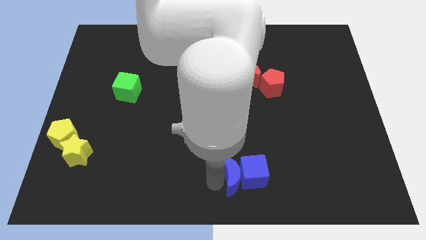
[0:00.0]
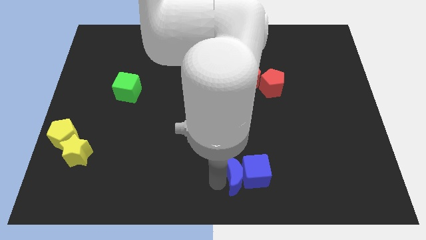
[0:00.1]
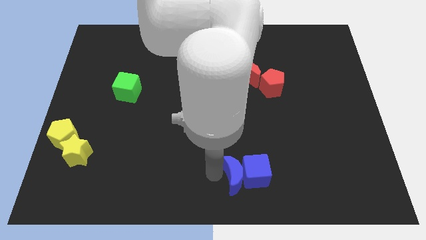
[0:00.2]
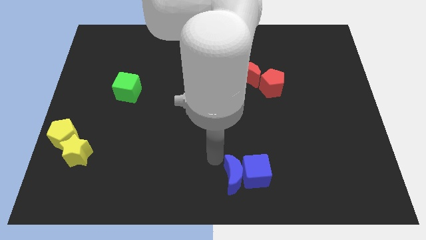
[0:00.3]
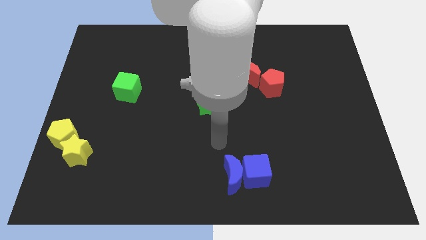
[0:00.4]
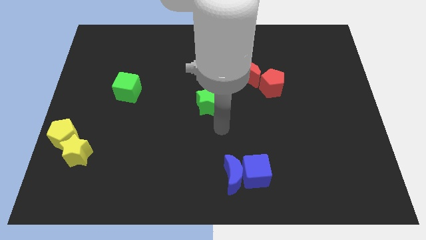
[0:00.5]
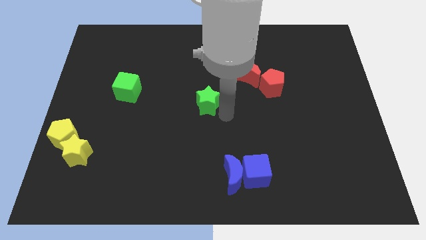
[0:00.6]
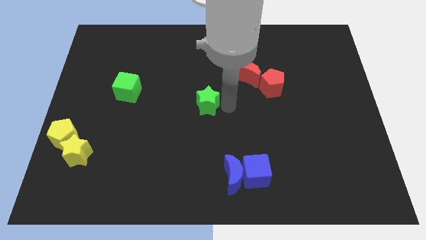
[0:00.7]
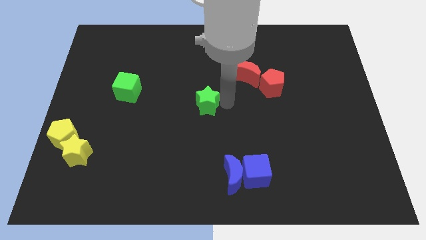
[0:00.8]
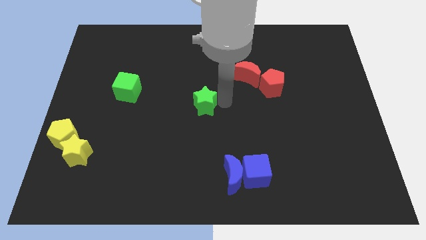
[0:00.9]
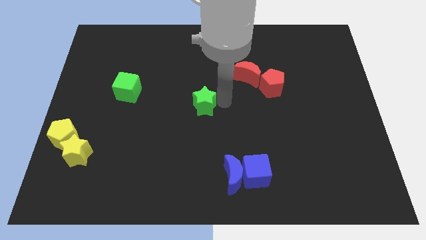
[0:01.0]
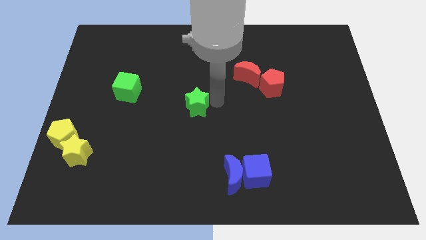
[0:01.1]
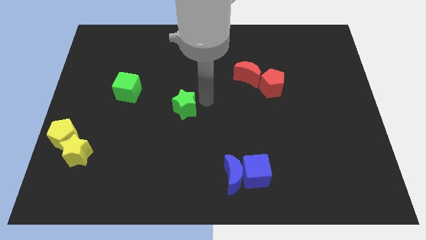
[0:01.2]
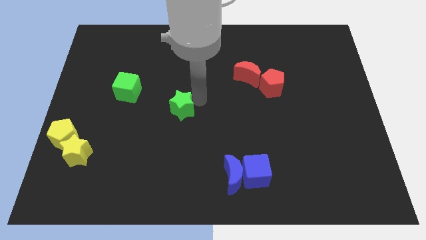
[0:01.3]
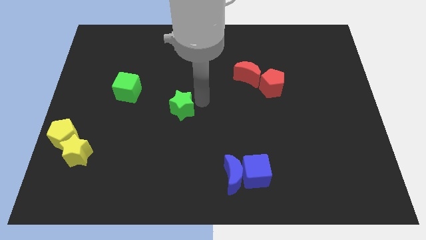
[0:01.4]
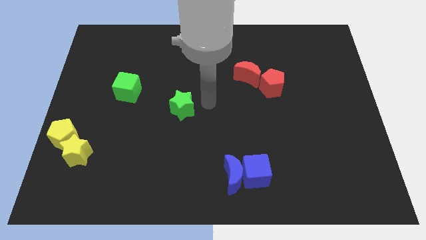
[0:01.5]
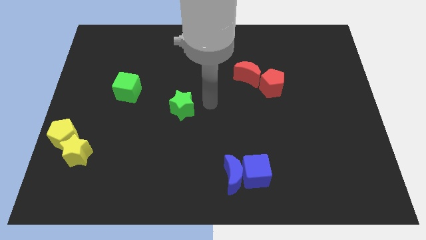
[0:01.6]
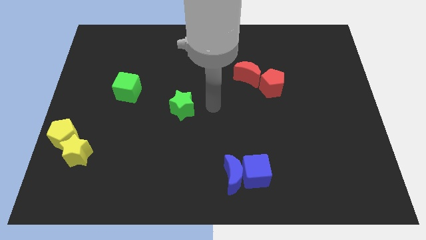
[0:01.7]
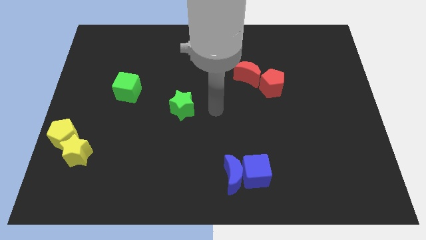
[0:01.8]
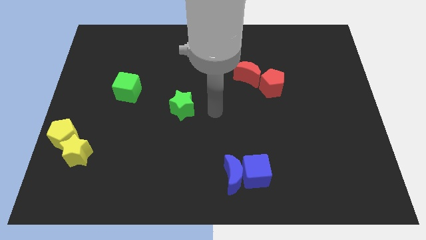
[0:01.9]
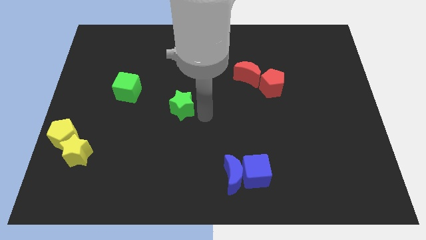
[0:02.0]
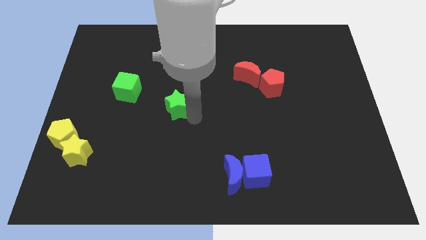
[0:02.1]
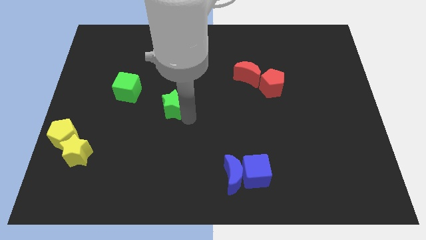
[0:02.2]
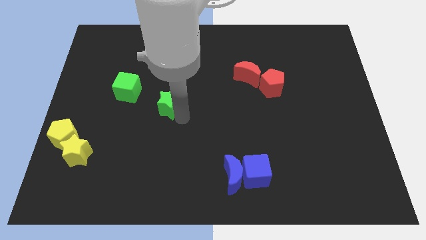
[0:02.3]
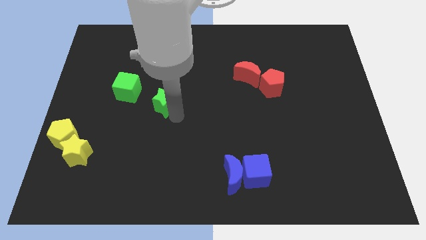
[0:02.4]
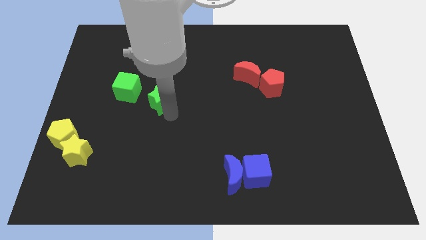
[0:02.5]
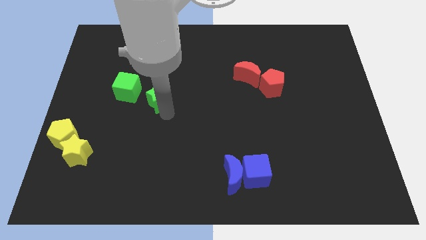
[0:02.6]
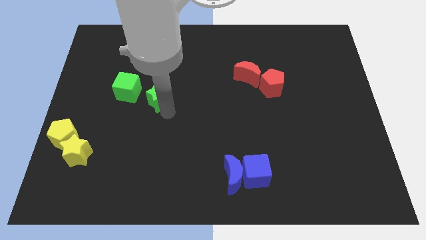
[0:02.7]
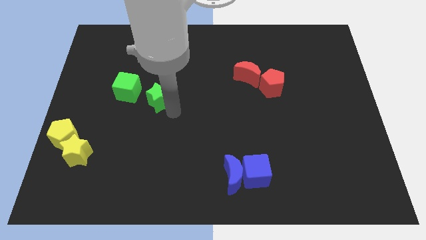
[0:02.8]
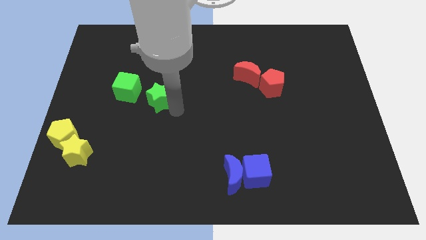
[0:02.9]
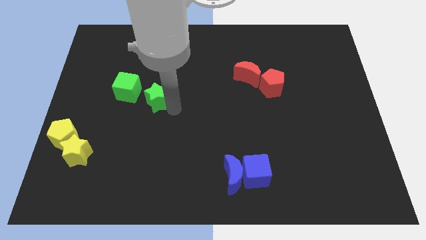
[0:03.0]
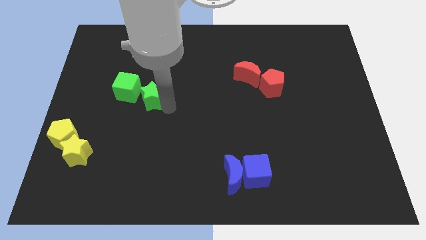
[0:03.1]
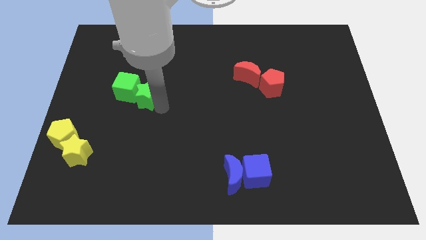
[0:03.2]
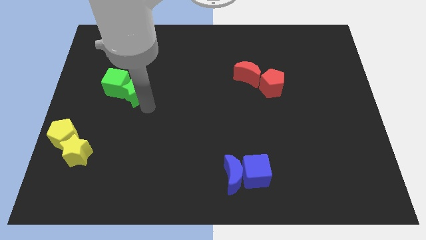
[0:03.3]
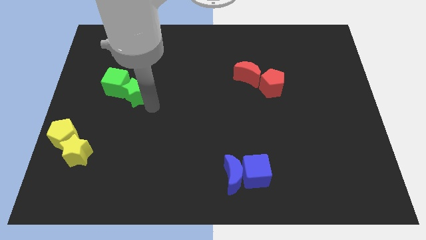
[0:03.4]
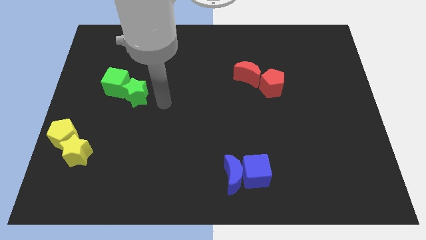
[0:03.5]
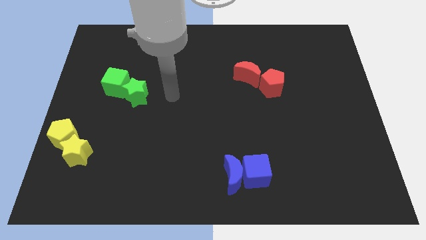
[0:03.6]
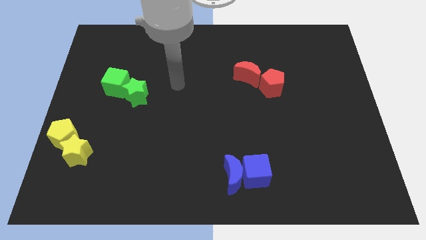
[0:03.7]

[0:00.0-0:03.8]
move the green star into the green cube slightly

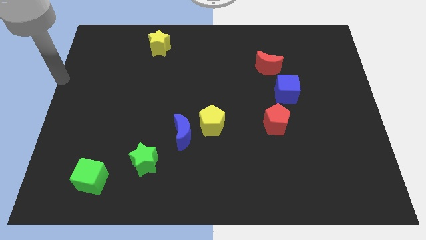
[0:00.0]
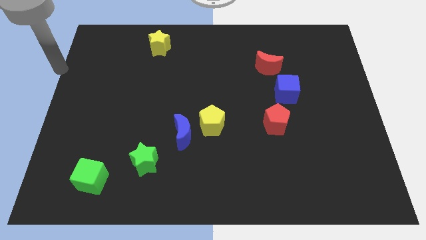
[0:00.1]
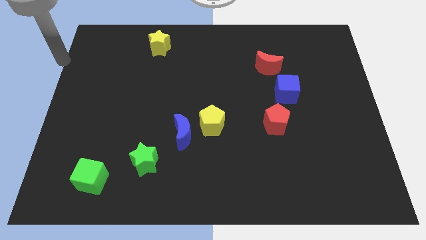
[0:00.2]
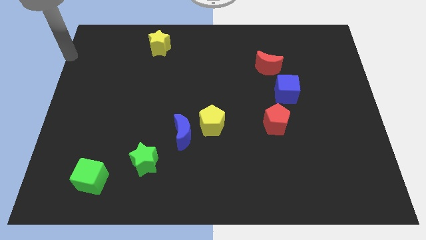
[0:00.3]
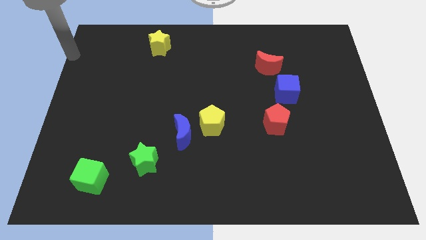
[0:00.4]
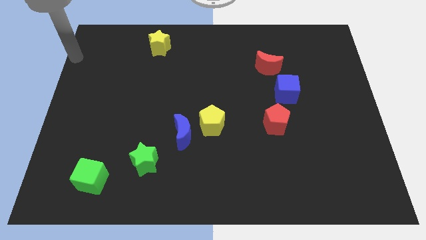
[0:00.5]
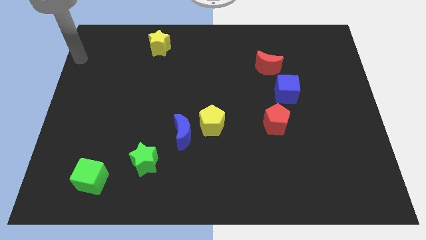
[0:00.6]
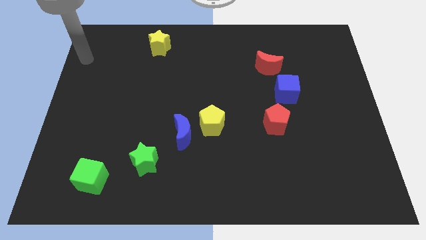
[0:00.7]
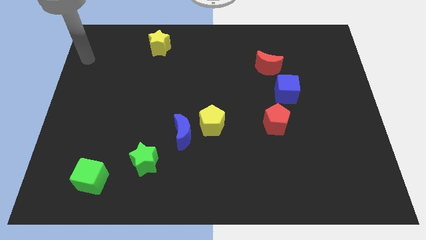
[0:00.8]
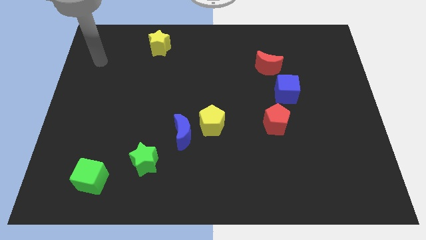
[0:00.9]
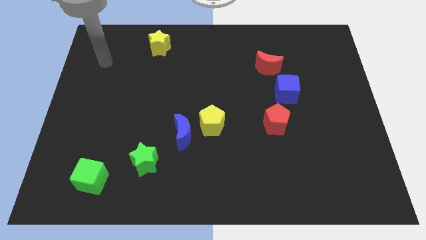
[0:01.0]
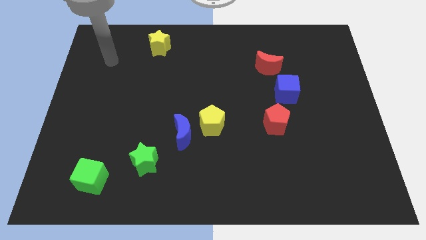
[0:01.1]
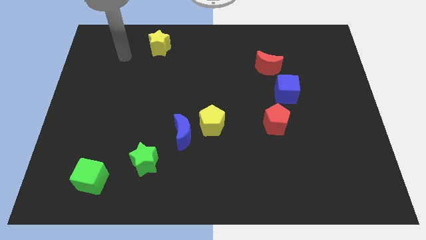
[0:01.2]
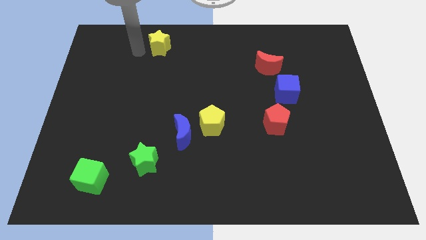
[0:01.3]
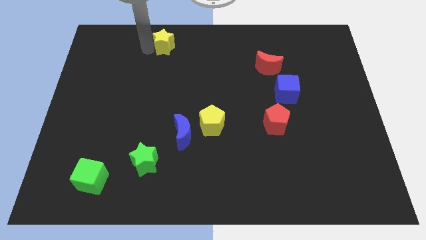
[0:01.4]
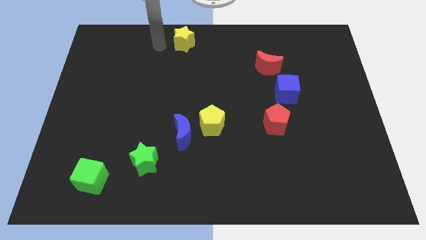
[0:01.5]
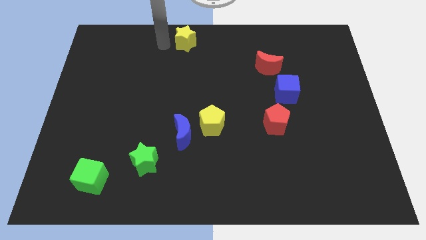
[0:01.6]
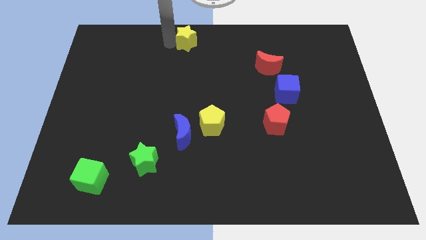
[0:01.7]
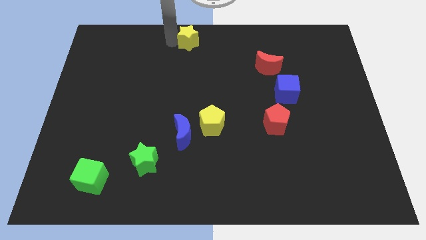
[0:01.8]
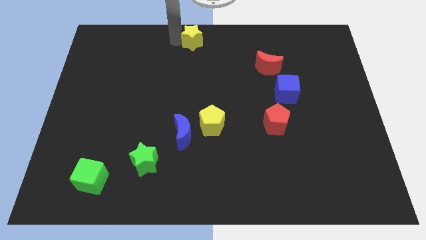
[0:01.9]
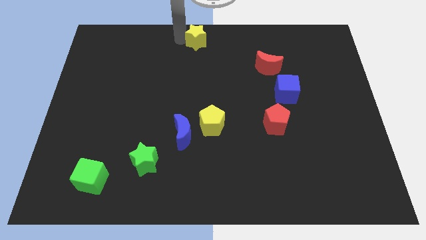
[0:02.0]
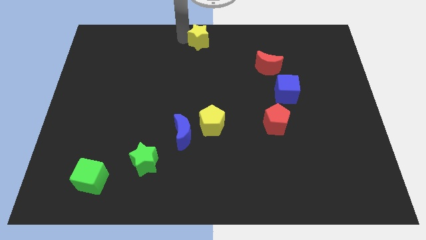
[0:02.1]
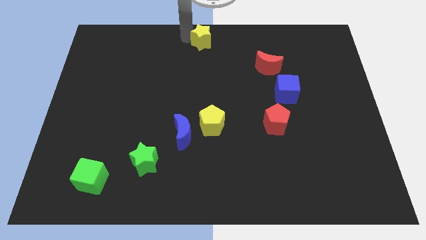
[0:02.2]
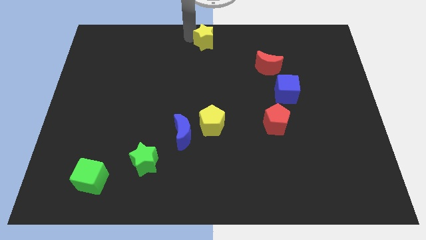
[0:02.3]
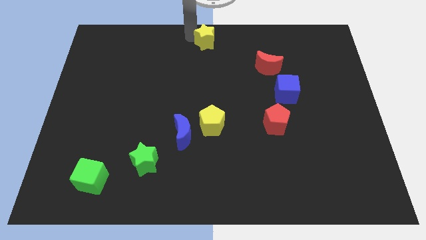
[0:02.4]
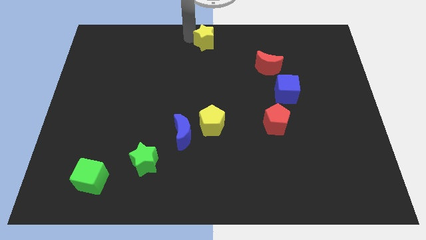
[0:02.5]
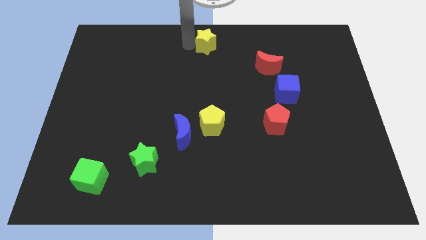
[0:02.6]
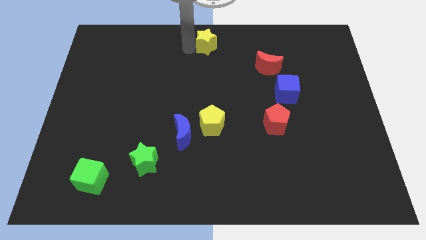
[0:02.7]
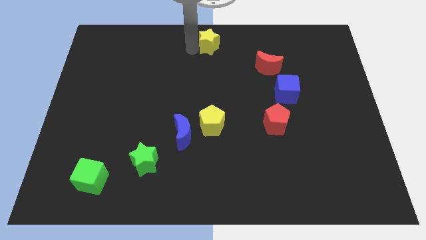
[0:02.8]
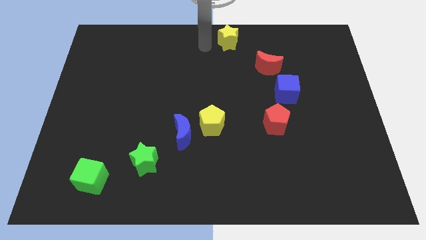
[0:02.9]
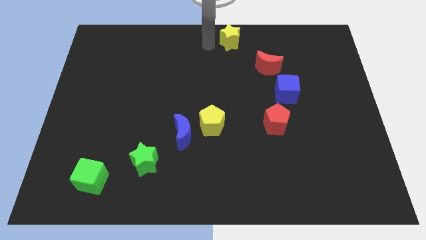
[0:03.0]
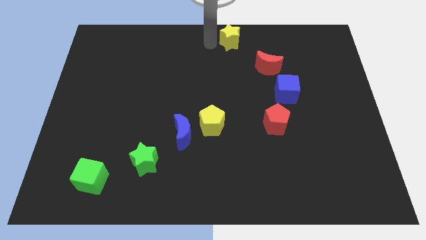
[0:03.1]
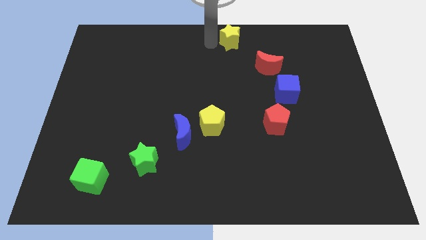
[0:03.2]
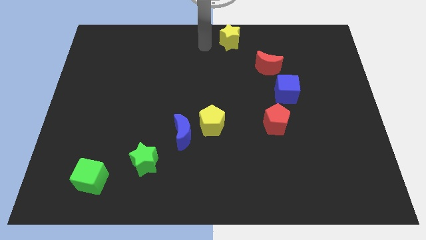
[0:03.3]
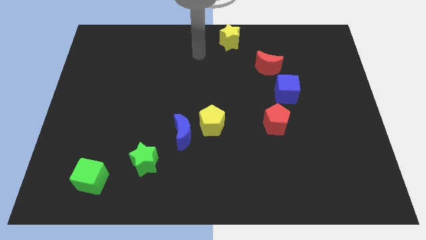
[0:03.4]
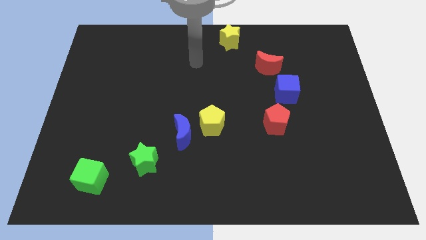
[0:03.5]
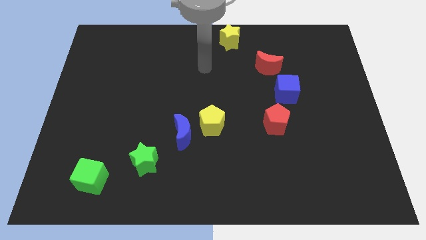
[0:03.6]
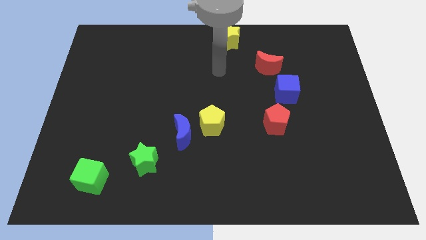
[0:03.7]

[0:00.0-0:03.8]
put yellow star diagonally top left to red moon

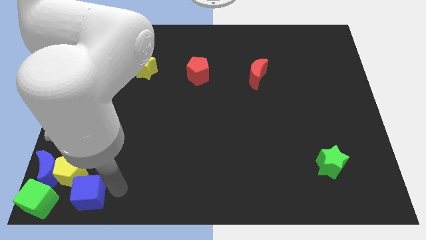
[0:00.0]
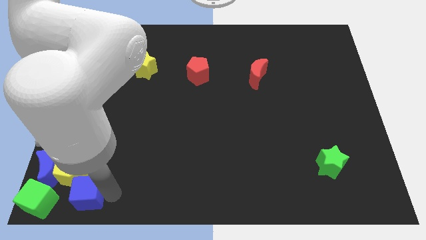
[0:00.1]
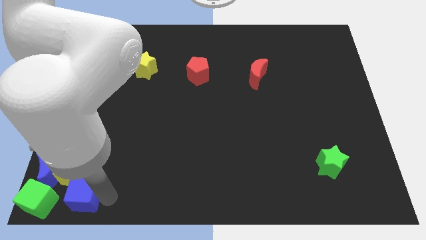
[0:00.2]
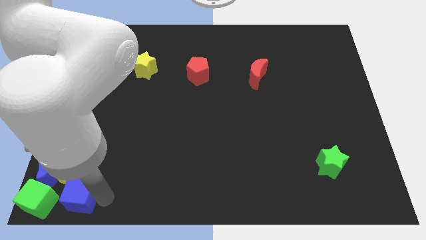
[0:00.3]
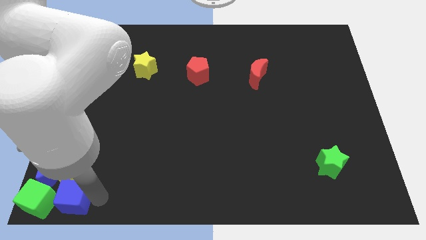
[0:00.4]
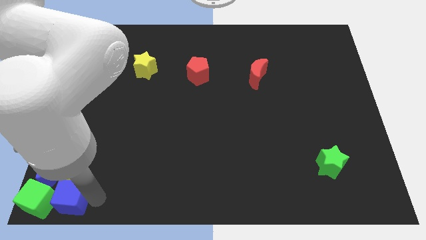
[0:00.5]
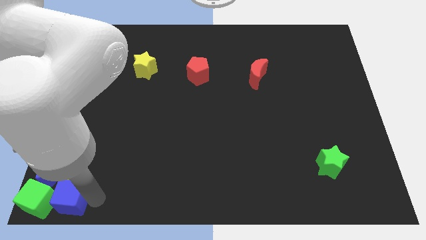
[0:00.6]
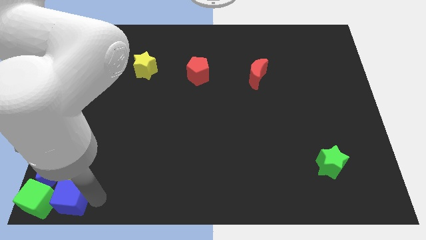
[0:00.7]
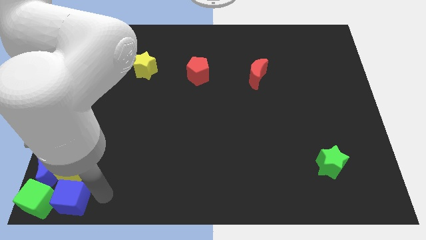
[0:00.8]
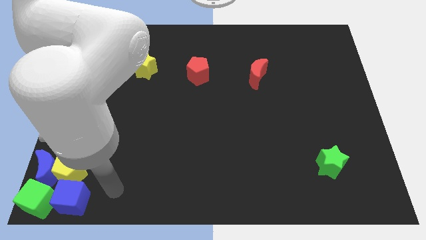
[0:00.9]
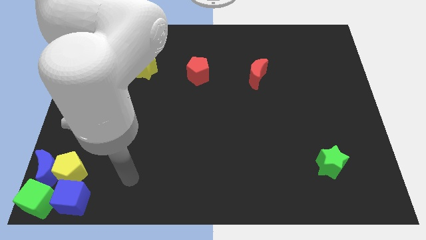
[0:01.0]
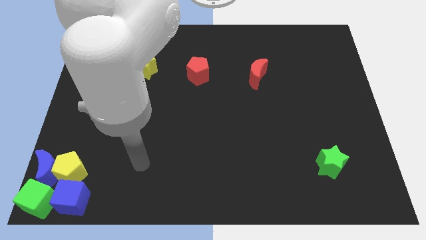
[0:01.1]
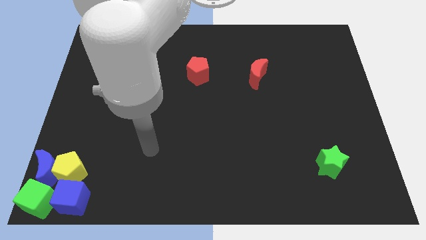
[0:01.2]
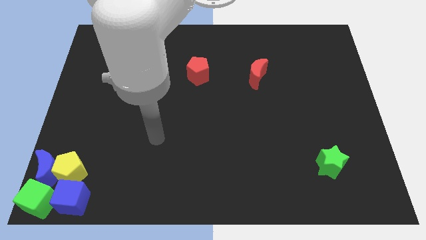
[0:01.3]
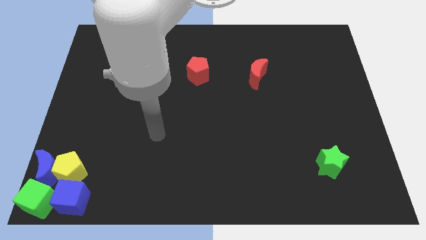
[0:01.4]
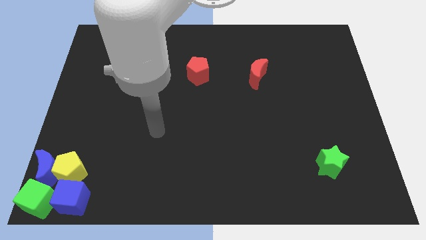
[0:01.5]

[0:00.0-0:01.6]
push the blue cube into the green cube
